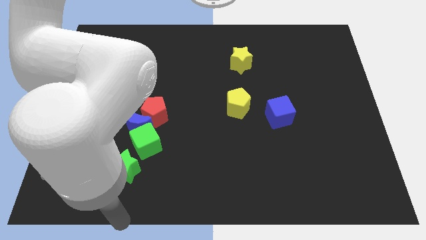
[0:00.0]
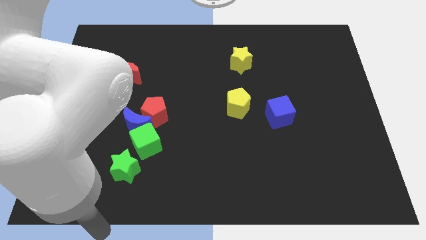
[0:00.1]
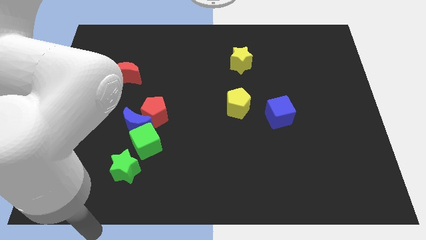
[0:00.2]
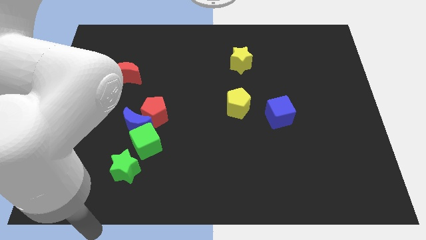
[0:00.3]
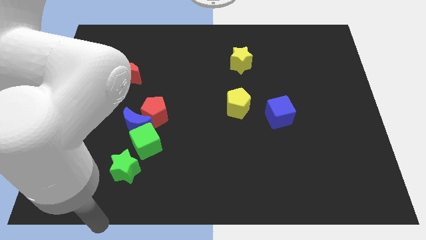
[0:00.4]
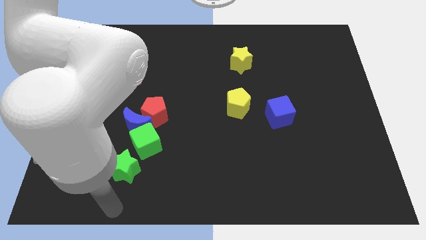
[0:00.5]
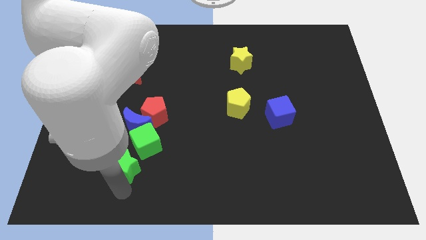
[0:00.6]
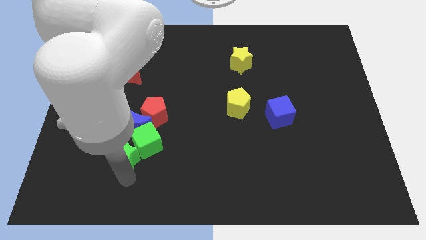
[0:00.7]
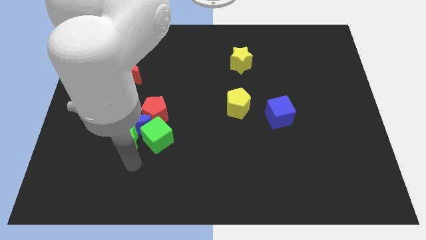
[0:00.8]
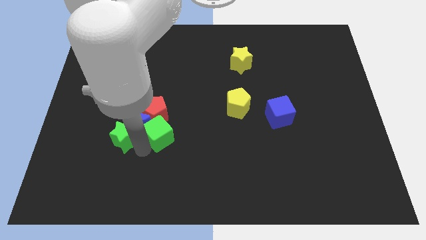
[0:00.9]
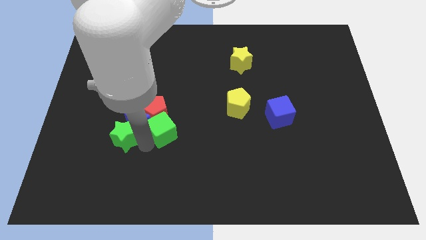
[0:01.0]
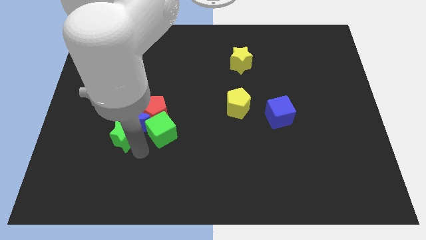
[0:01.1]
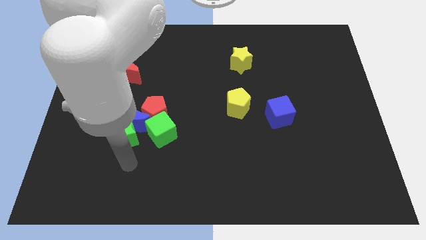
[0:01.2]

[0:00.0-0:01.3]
push the green star into the blue crescent

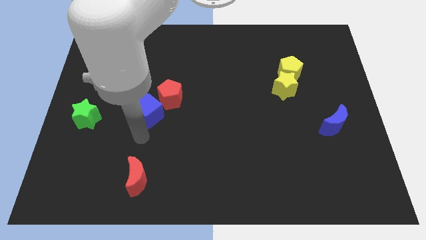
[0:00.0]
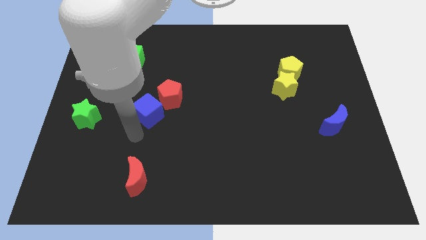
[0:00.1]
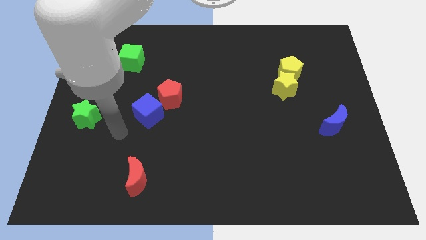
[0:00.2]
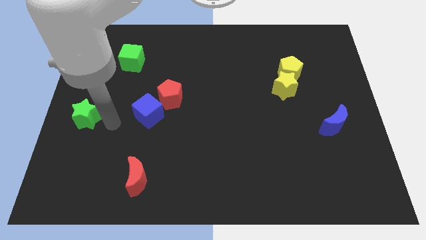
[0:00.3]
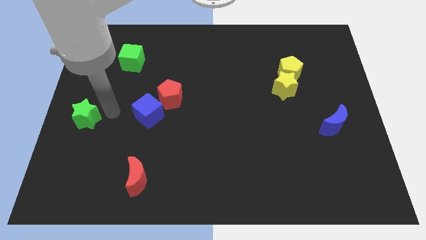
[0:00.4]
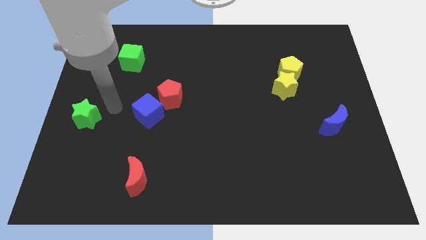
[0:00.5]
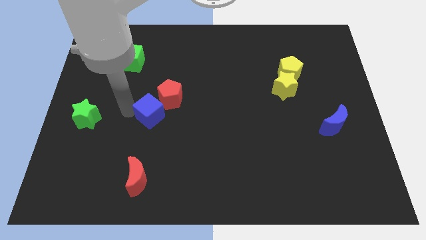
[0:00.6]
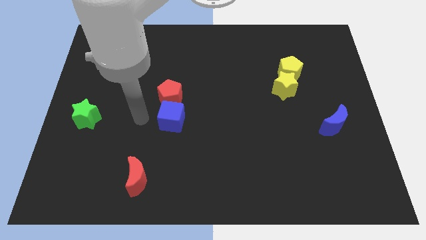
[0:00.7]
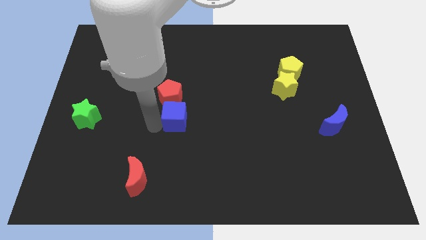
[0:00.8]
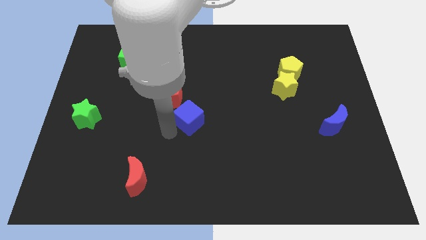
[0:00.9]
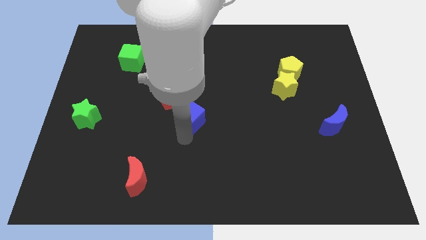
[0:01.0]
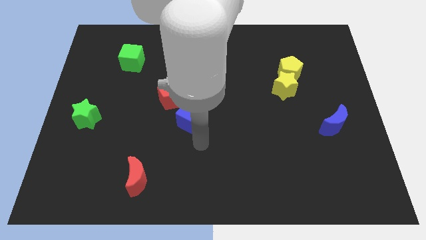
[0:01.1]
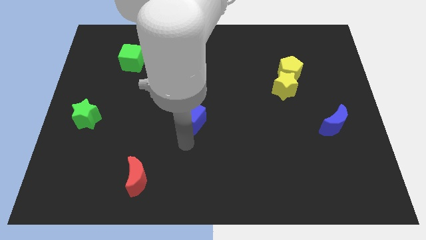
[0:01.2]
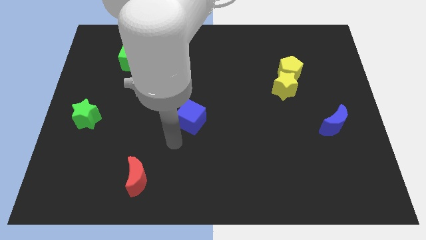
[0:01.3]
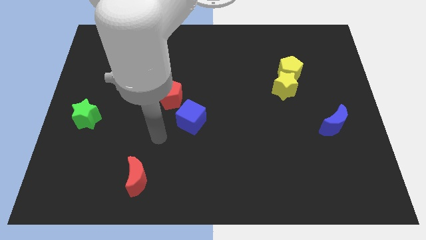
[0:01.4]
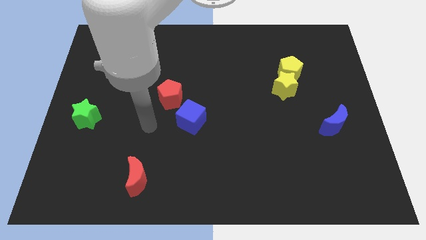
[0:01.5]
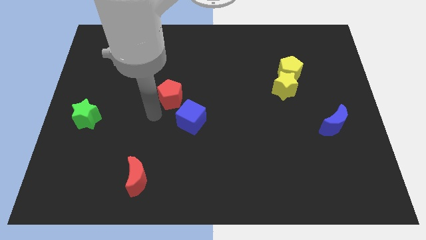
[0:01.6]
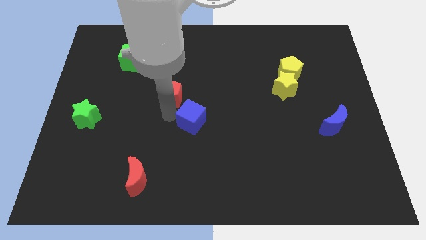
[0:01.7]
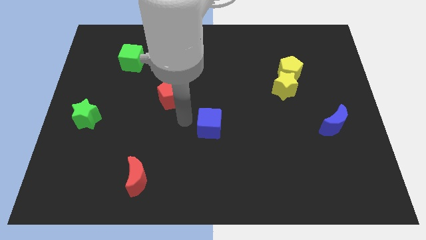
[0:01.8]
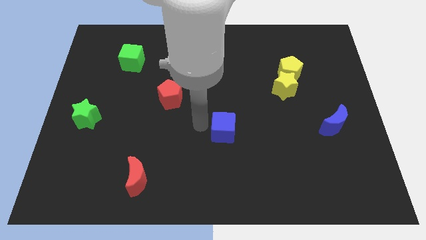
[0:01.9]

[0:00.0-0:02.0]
move the blue cube to the left of the blue moon

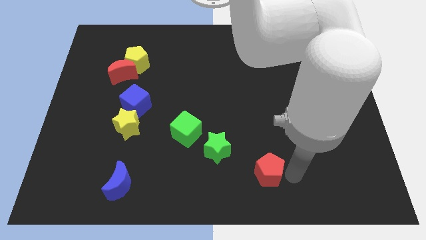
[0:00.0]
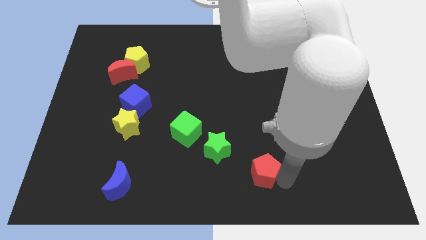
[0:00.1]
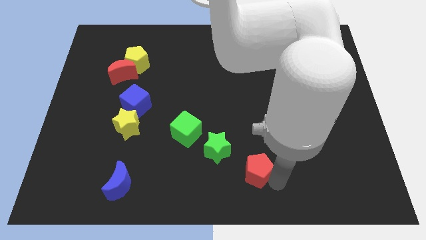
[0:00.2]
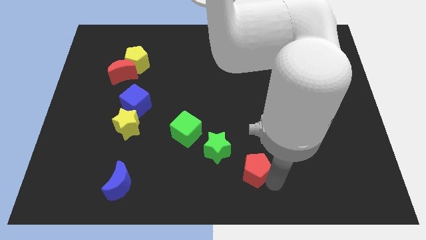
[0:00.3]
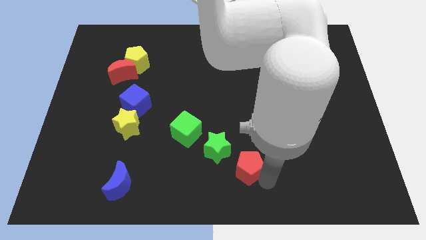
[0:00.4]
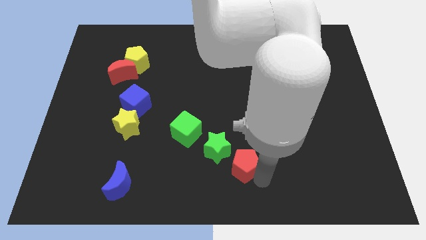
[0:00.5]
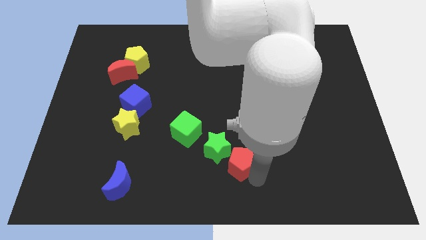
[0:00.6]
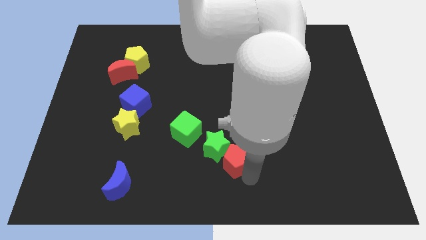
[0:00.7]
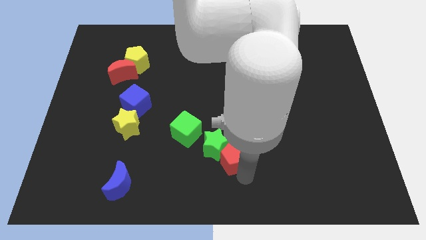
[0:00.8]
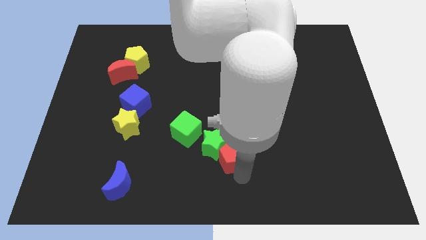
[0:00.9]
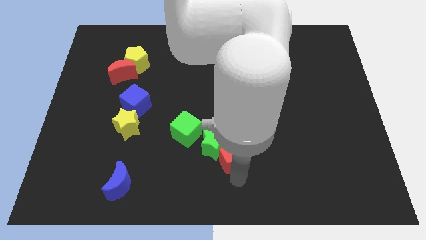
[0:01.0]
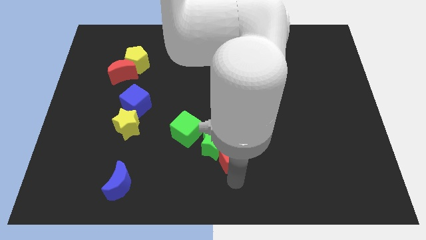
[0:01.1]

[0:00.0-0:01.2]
push the red pentagon into the green star

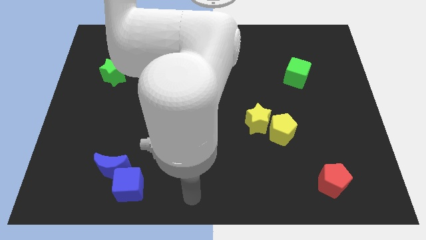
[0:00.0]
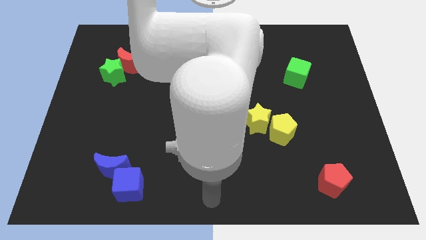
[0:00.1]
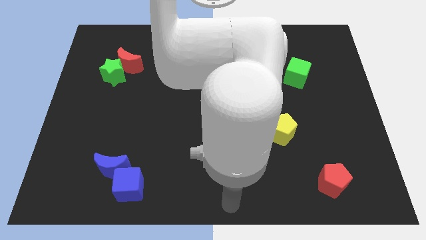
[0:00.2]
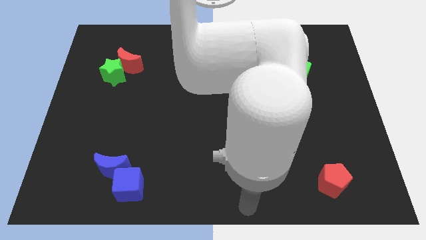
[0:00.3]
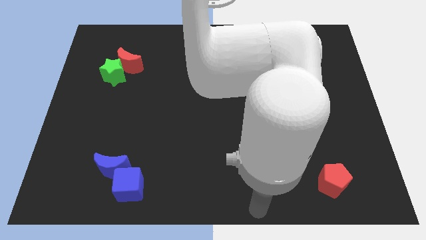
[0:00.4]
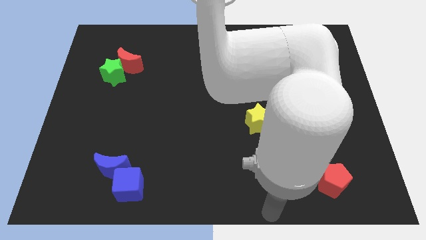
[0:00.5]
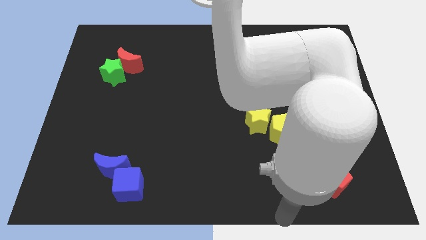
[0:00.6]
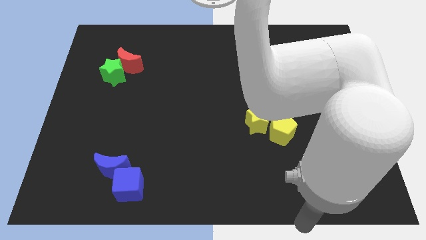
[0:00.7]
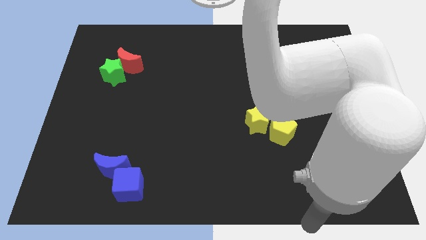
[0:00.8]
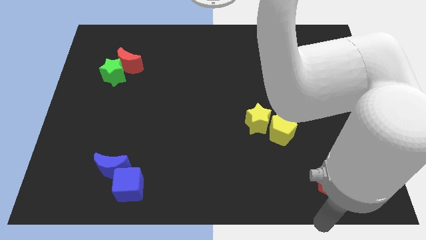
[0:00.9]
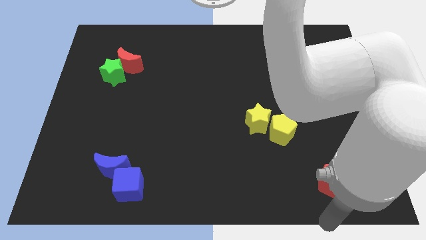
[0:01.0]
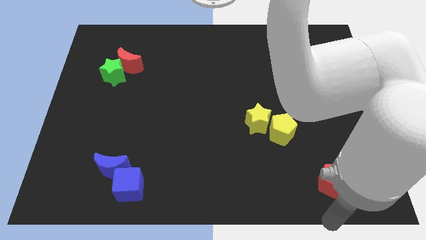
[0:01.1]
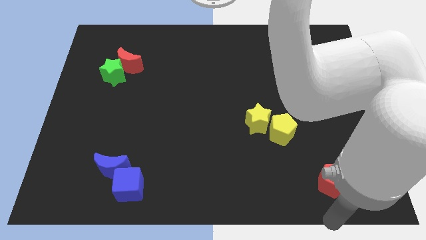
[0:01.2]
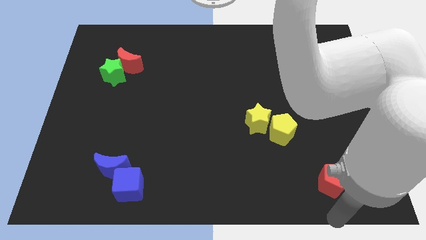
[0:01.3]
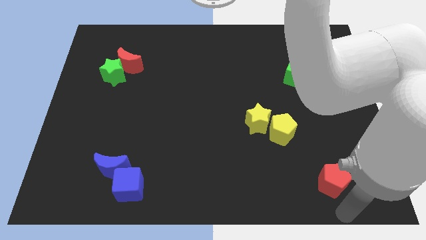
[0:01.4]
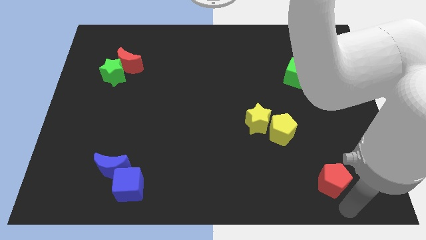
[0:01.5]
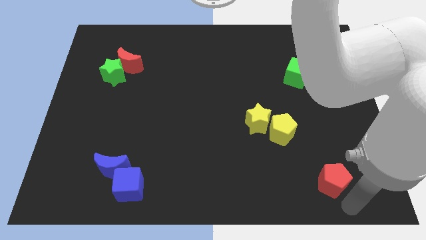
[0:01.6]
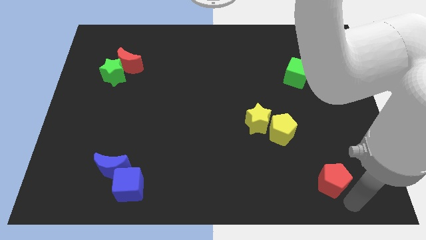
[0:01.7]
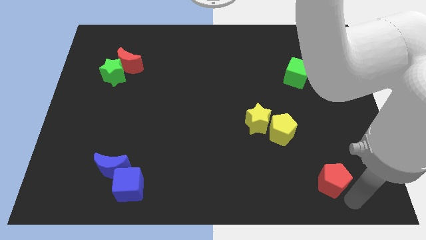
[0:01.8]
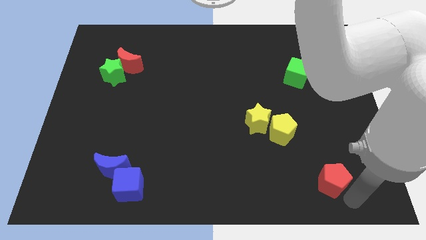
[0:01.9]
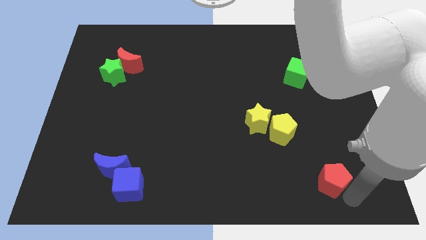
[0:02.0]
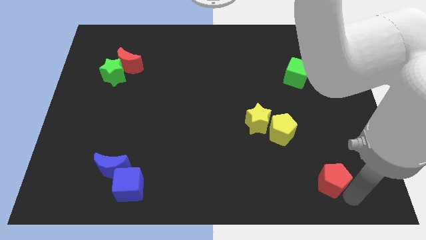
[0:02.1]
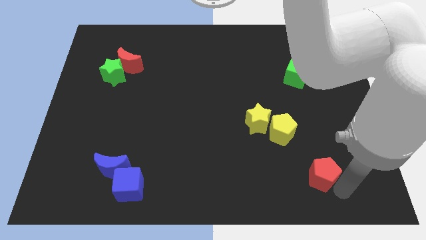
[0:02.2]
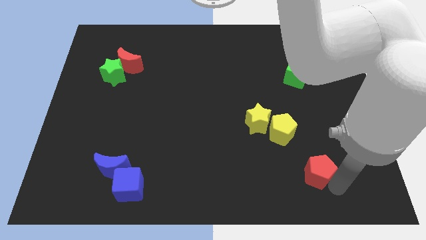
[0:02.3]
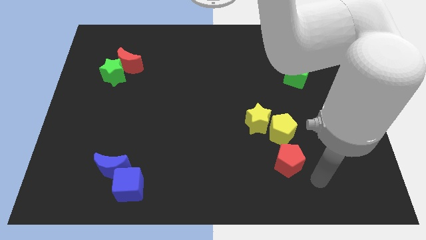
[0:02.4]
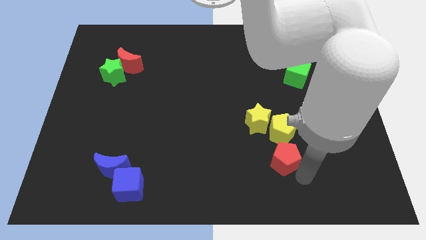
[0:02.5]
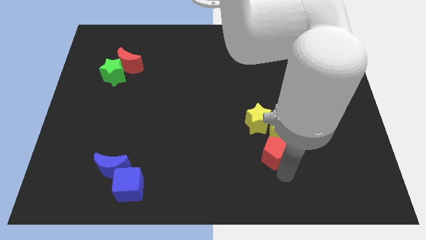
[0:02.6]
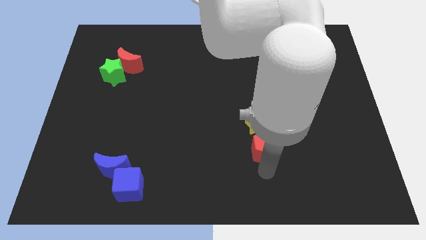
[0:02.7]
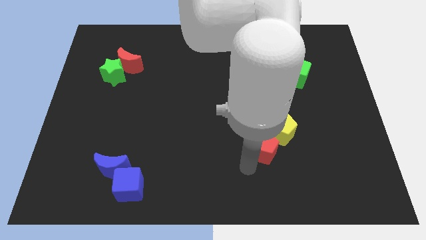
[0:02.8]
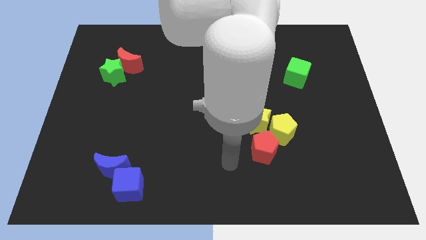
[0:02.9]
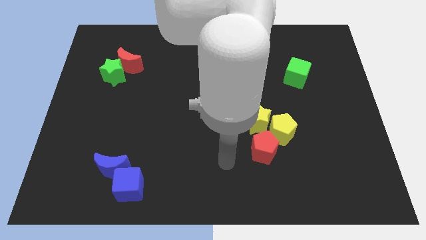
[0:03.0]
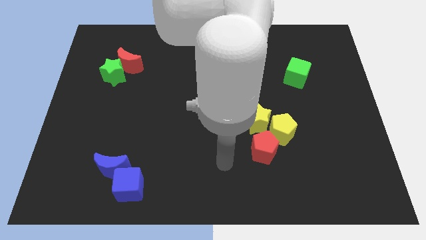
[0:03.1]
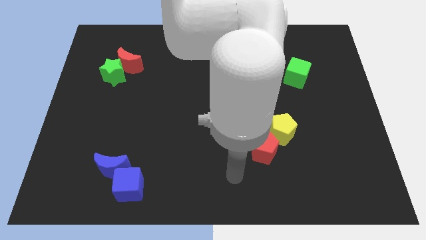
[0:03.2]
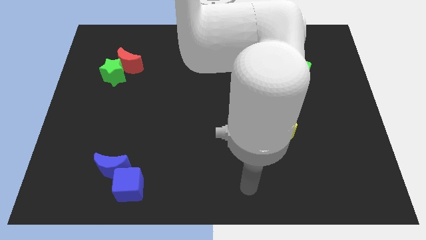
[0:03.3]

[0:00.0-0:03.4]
move the red pentagon to the yellow blocks

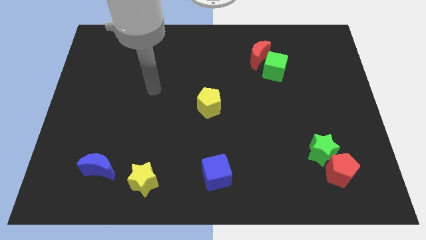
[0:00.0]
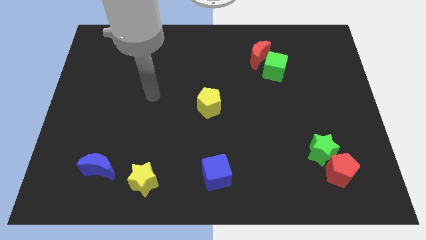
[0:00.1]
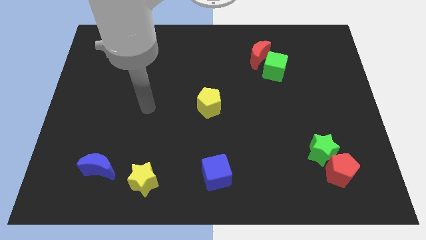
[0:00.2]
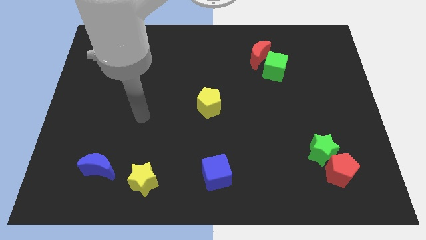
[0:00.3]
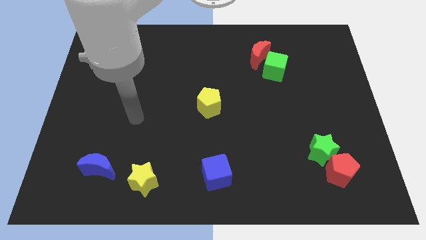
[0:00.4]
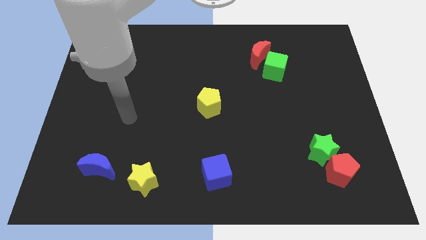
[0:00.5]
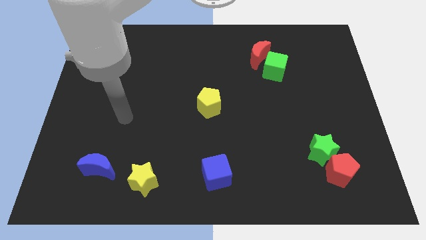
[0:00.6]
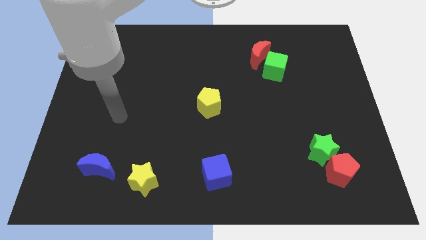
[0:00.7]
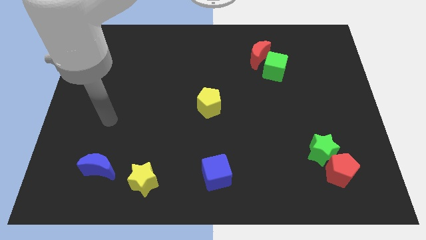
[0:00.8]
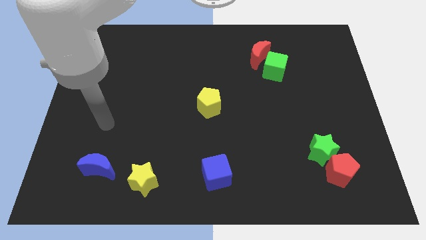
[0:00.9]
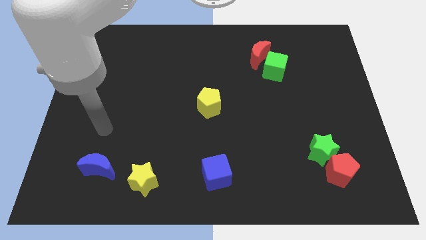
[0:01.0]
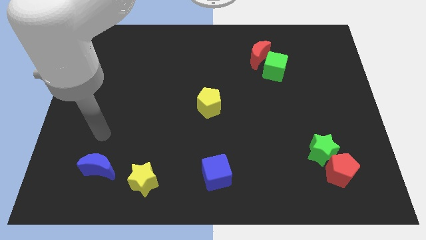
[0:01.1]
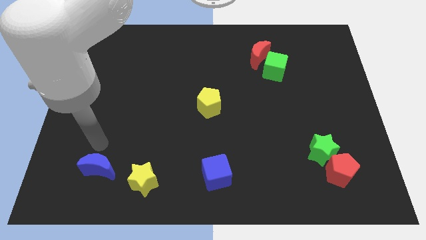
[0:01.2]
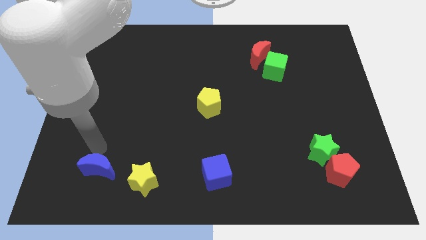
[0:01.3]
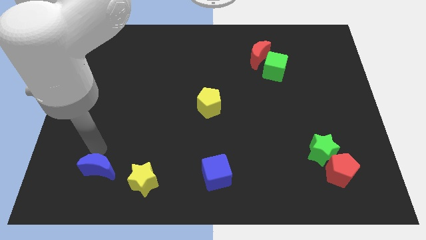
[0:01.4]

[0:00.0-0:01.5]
move near to the blue moon
